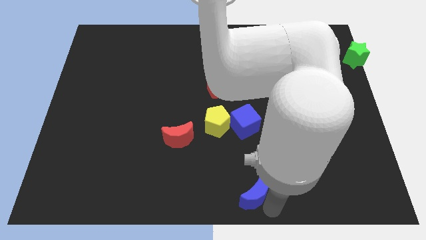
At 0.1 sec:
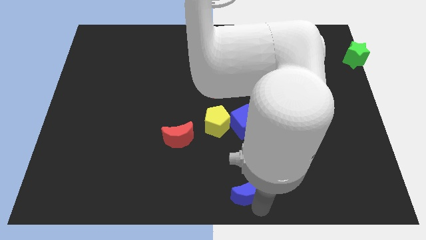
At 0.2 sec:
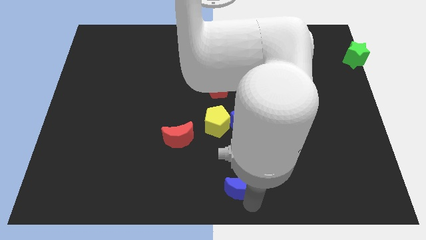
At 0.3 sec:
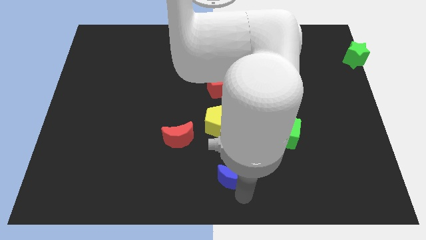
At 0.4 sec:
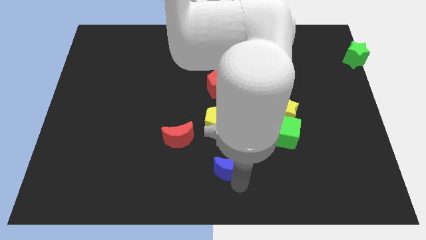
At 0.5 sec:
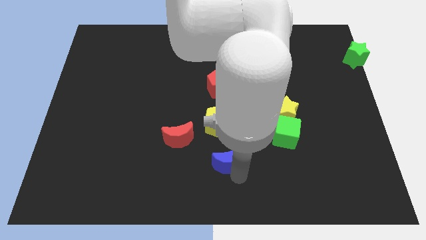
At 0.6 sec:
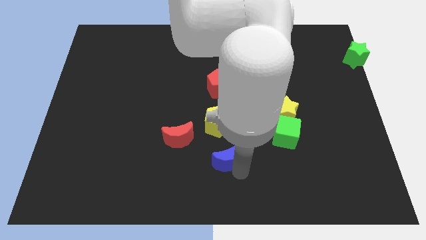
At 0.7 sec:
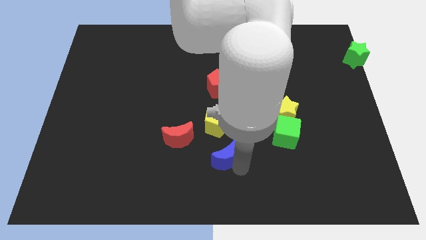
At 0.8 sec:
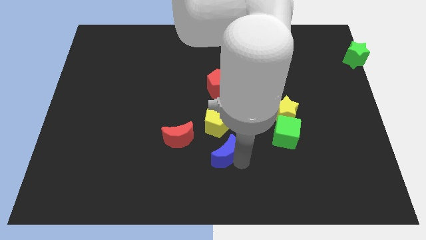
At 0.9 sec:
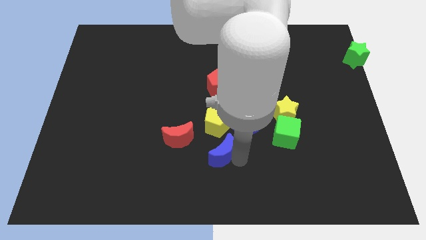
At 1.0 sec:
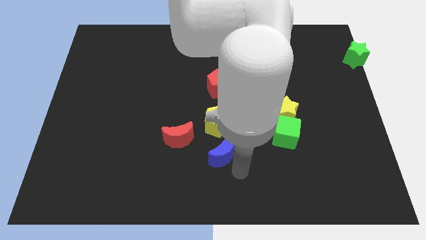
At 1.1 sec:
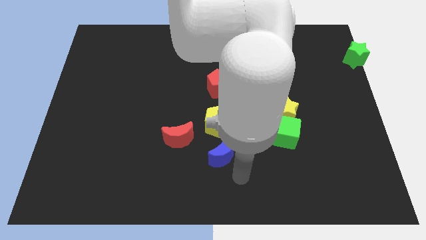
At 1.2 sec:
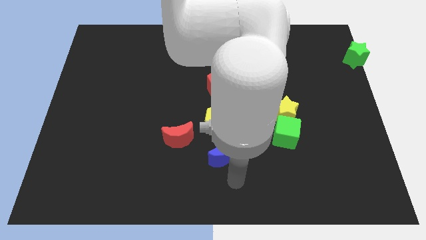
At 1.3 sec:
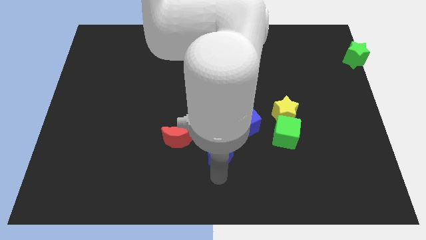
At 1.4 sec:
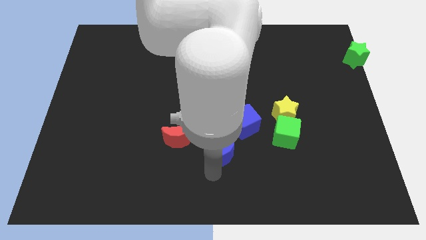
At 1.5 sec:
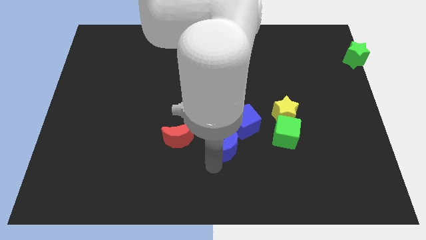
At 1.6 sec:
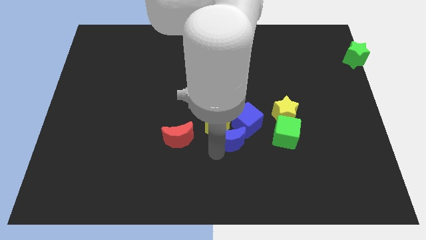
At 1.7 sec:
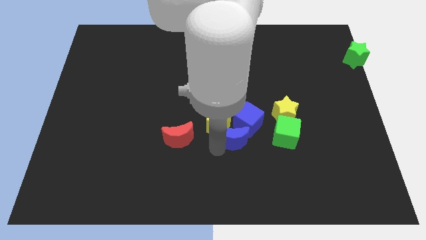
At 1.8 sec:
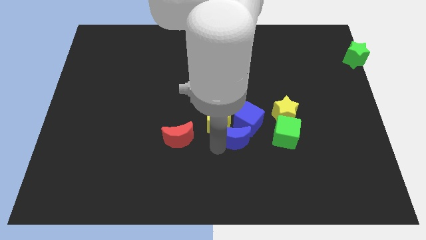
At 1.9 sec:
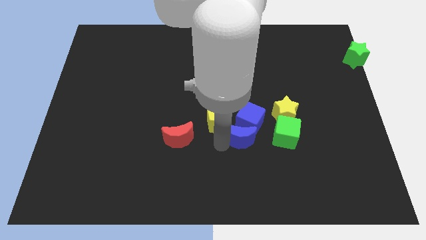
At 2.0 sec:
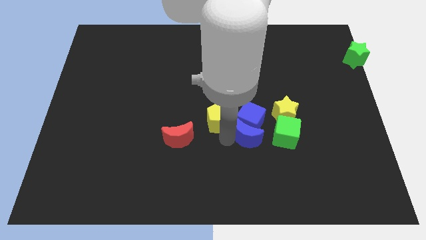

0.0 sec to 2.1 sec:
slide the blue crescent into the blue cube

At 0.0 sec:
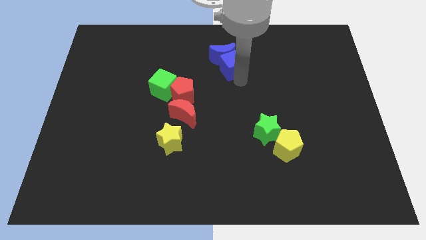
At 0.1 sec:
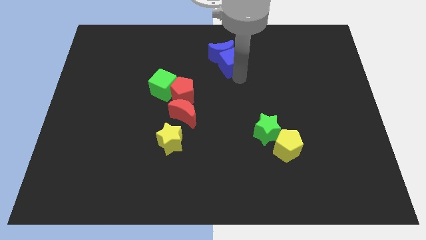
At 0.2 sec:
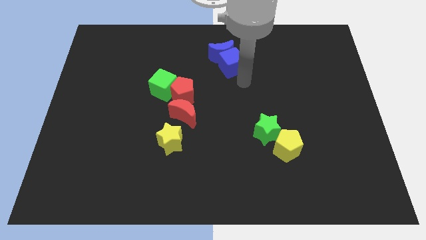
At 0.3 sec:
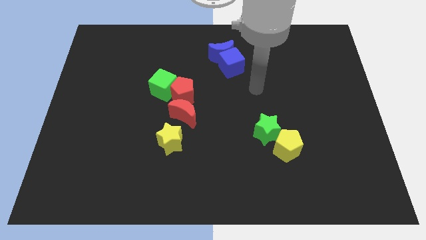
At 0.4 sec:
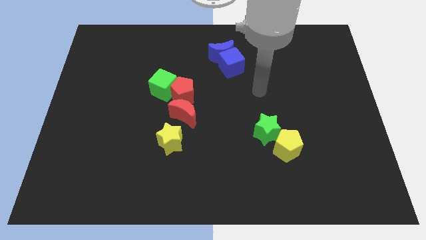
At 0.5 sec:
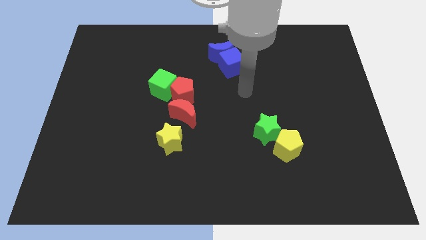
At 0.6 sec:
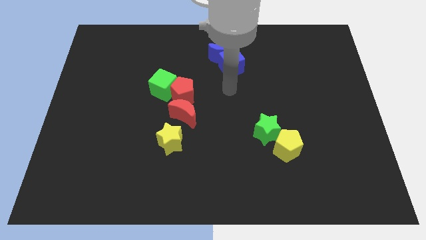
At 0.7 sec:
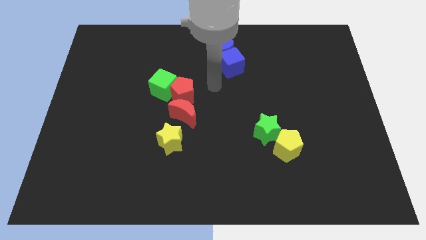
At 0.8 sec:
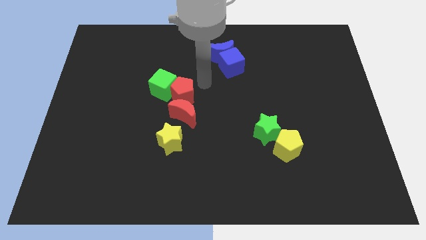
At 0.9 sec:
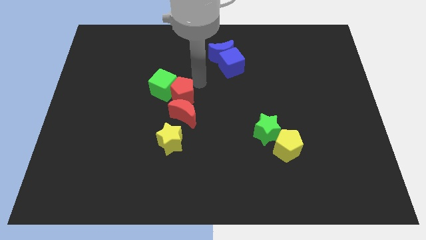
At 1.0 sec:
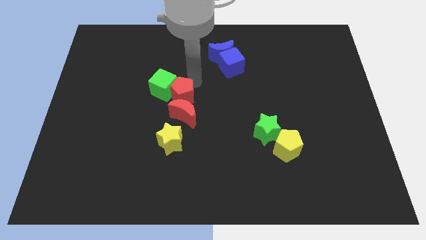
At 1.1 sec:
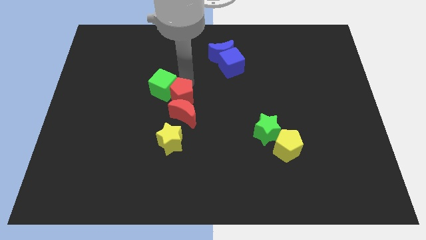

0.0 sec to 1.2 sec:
move your arm toward the red pentagon

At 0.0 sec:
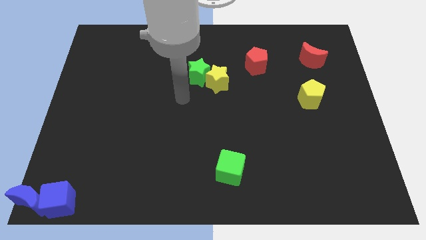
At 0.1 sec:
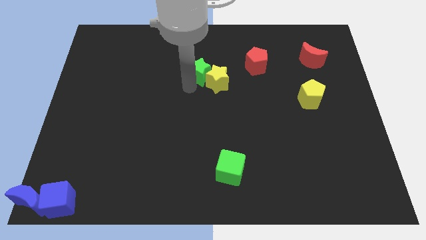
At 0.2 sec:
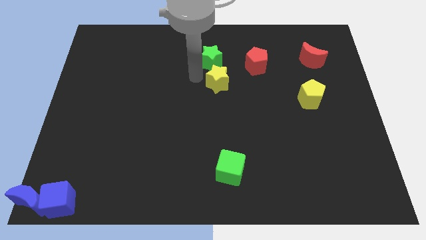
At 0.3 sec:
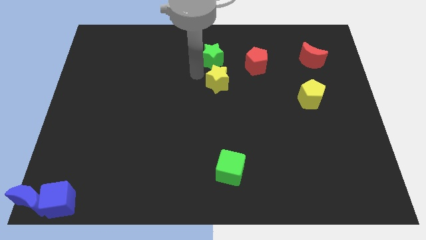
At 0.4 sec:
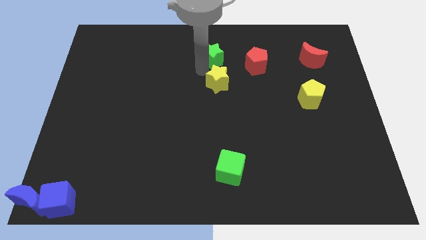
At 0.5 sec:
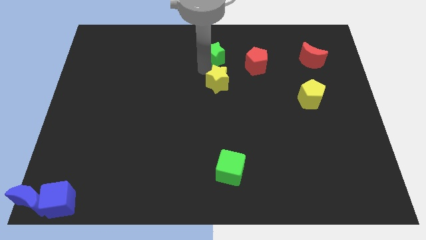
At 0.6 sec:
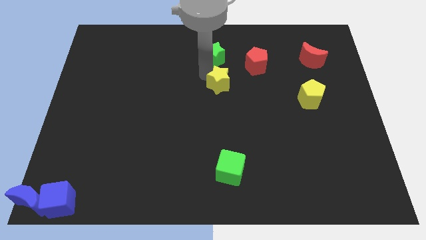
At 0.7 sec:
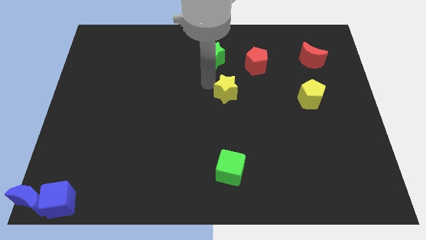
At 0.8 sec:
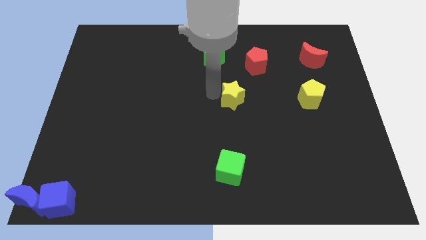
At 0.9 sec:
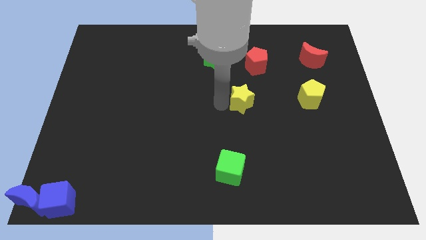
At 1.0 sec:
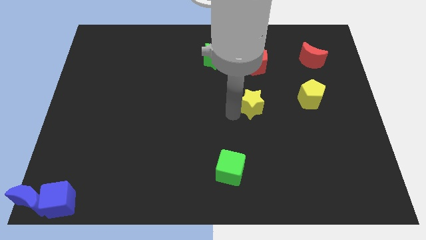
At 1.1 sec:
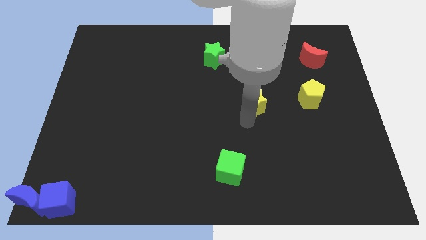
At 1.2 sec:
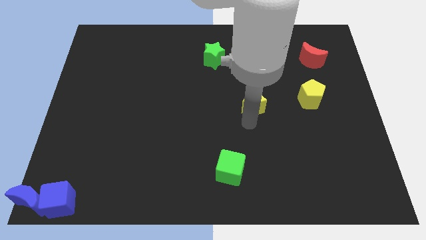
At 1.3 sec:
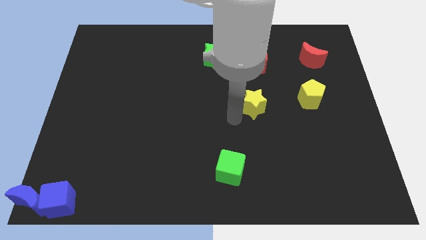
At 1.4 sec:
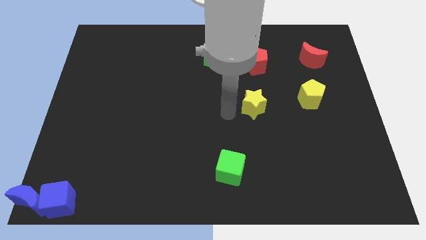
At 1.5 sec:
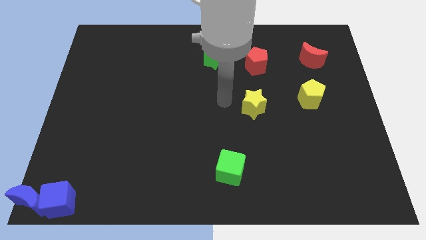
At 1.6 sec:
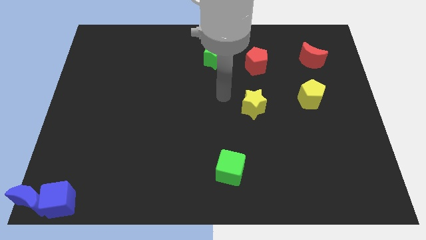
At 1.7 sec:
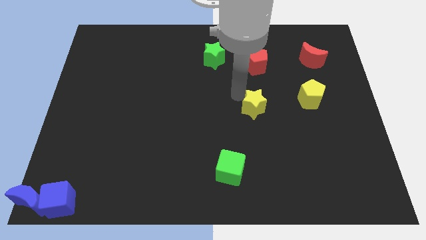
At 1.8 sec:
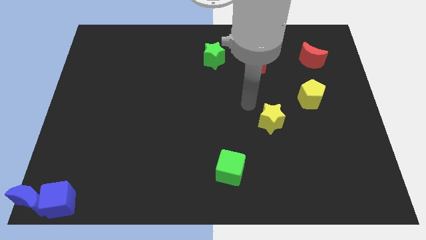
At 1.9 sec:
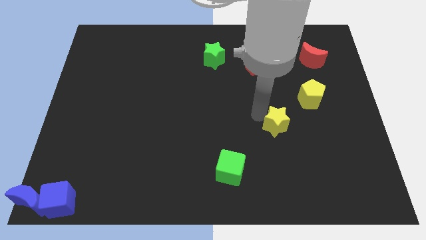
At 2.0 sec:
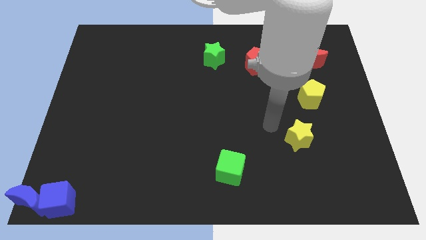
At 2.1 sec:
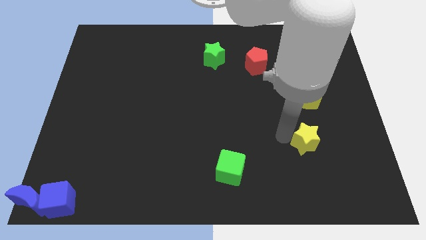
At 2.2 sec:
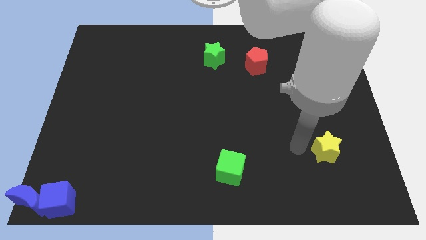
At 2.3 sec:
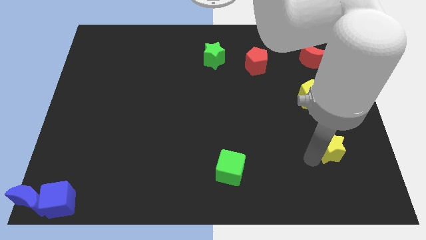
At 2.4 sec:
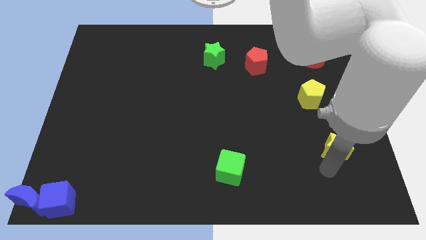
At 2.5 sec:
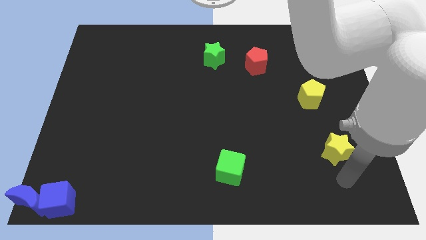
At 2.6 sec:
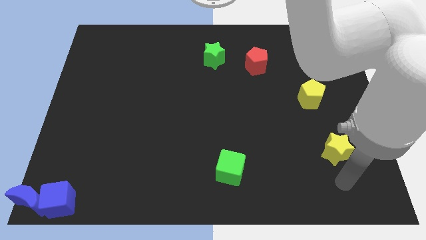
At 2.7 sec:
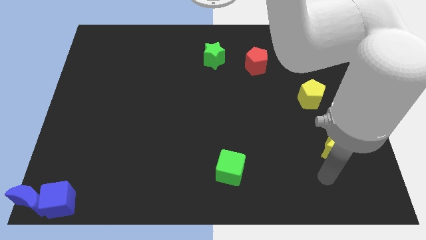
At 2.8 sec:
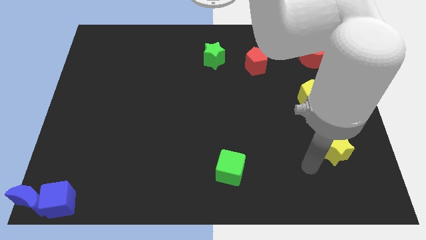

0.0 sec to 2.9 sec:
separate green star and yellow star

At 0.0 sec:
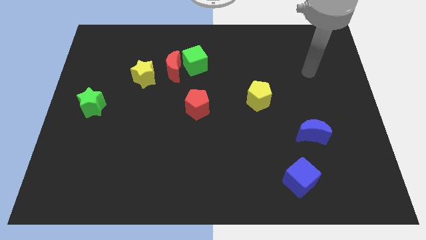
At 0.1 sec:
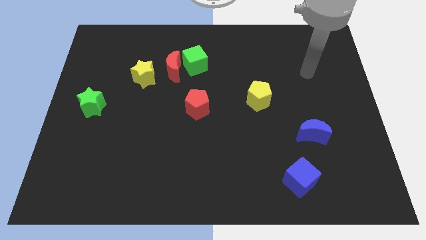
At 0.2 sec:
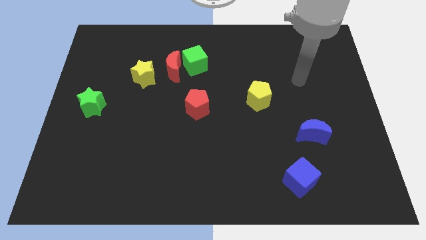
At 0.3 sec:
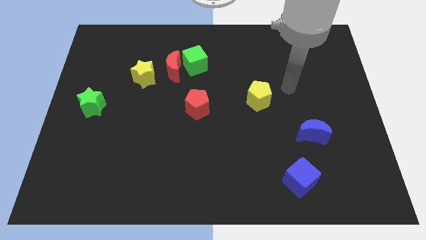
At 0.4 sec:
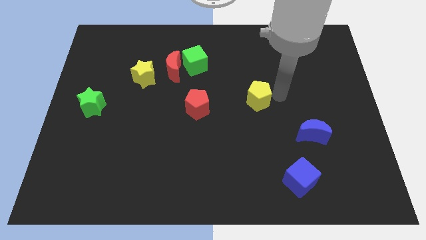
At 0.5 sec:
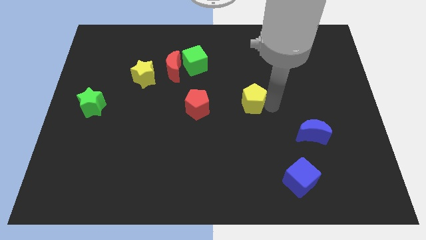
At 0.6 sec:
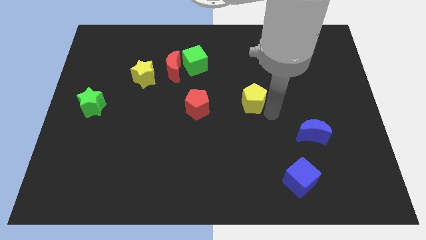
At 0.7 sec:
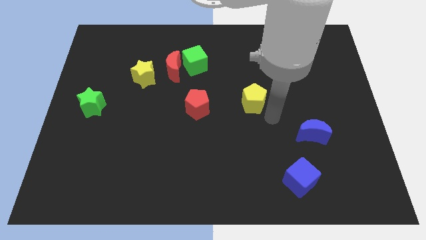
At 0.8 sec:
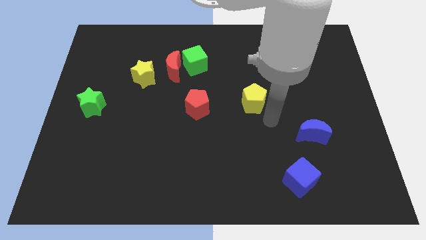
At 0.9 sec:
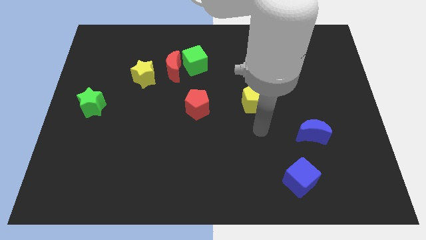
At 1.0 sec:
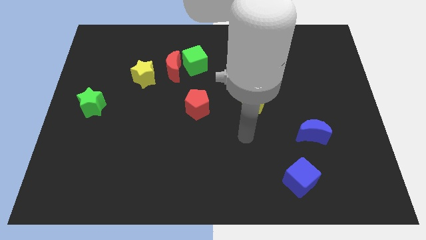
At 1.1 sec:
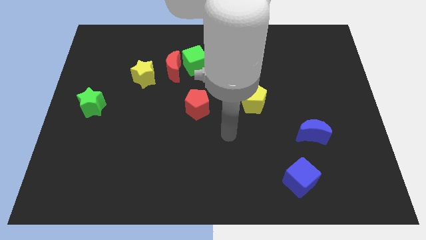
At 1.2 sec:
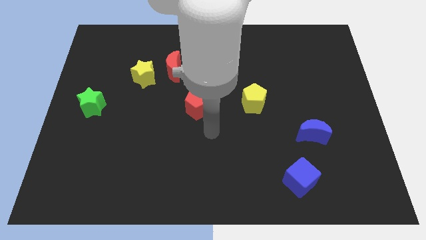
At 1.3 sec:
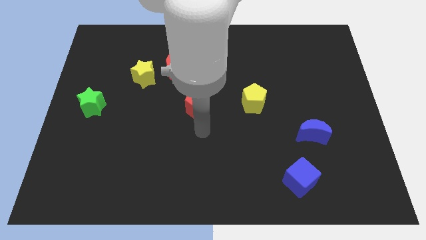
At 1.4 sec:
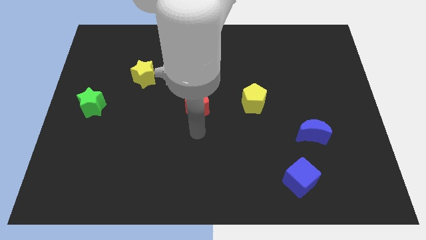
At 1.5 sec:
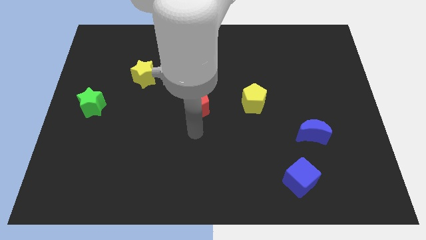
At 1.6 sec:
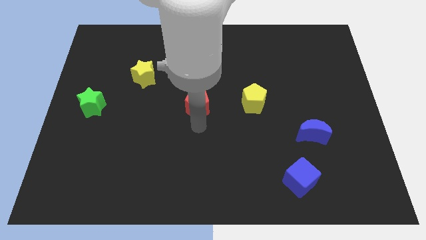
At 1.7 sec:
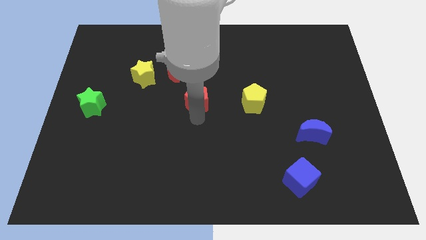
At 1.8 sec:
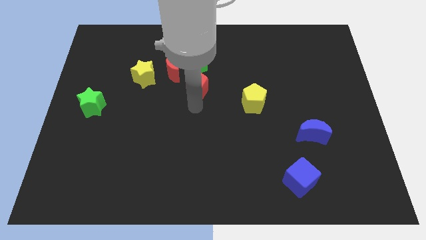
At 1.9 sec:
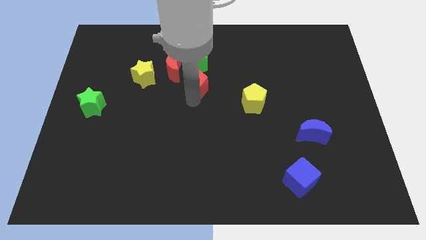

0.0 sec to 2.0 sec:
slightly touch the yellow pentagon

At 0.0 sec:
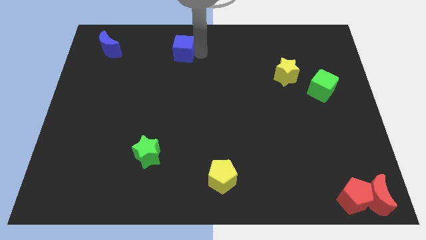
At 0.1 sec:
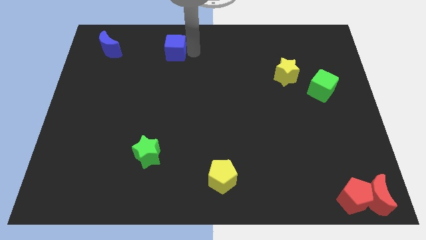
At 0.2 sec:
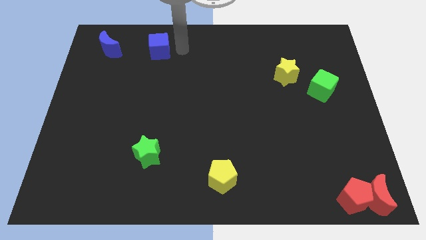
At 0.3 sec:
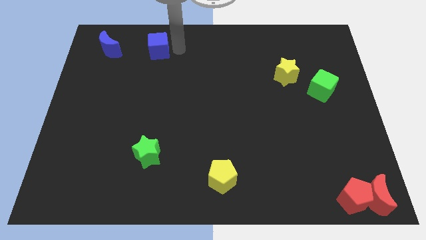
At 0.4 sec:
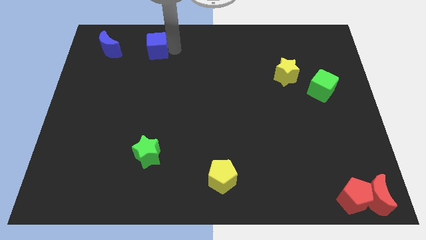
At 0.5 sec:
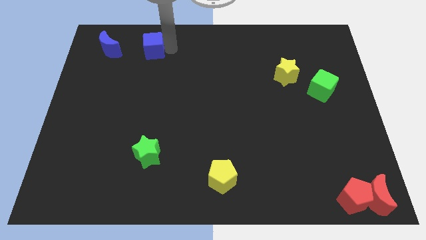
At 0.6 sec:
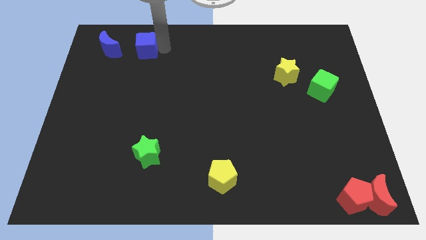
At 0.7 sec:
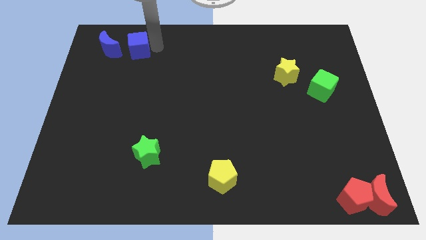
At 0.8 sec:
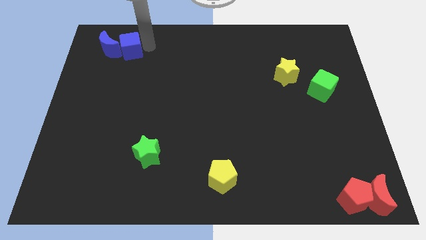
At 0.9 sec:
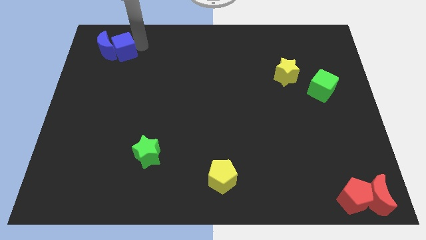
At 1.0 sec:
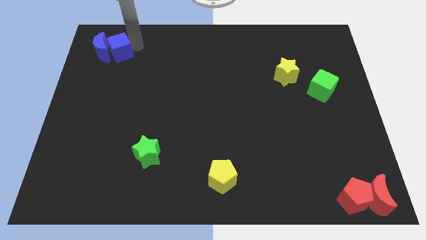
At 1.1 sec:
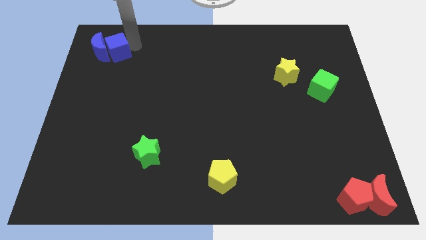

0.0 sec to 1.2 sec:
push the blue cube into the blue crescent
